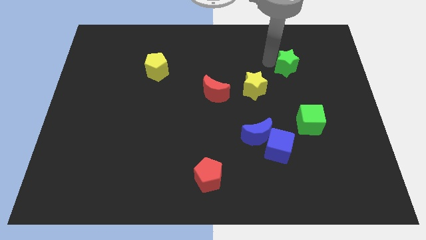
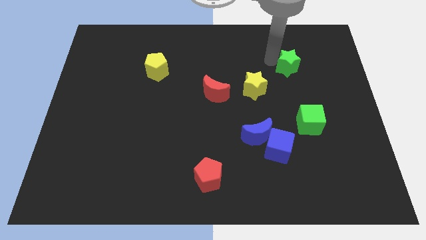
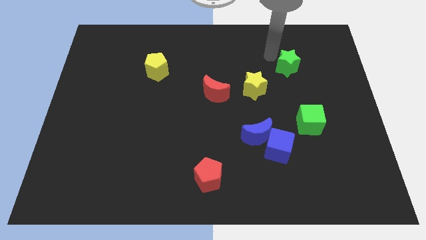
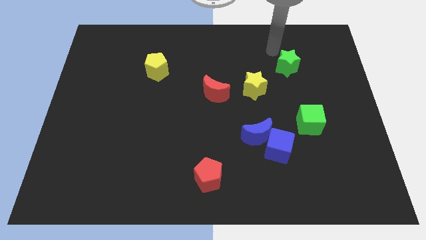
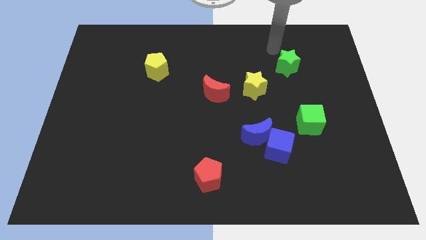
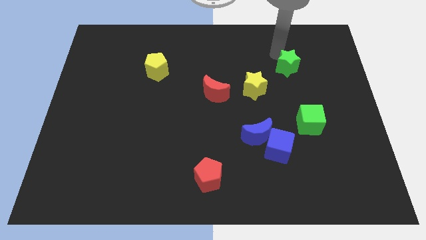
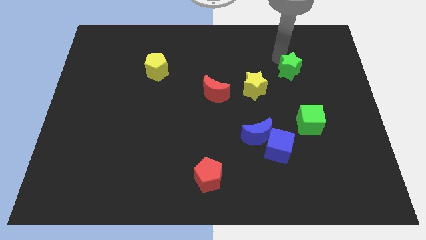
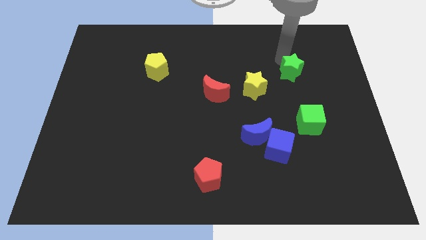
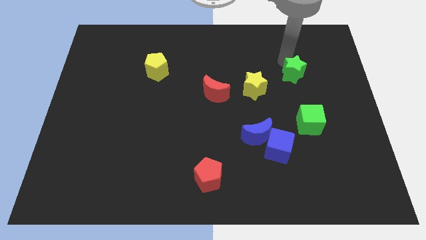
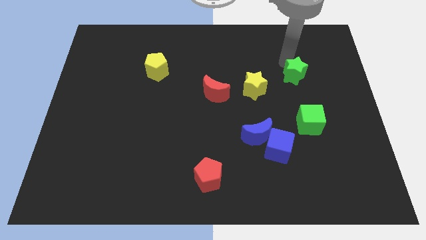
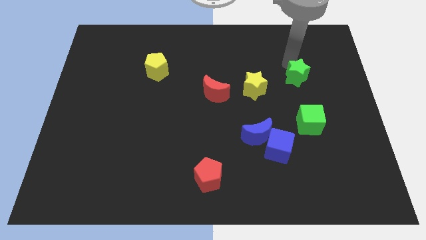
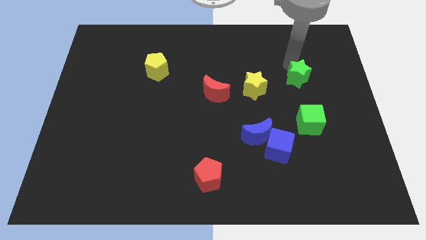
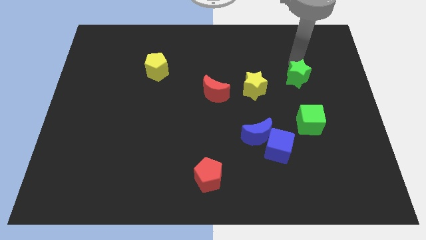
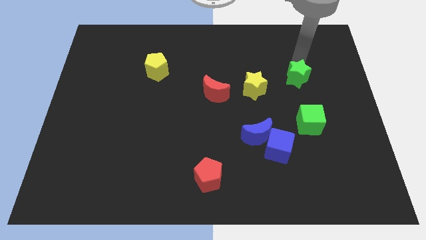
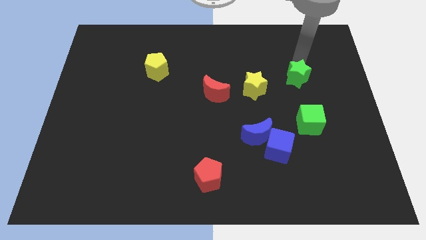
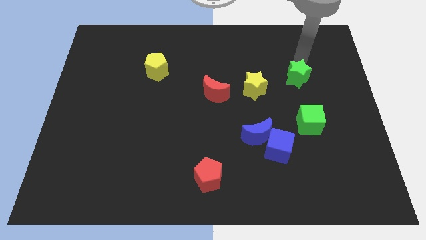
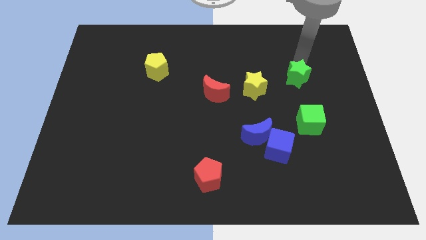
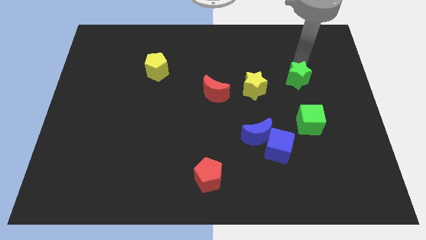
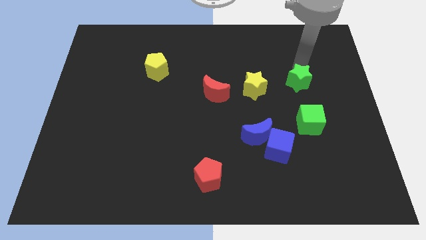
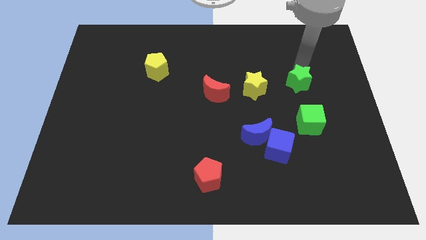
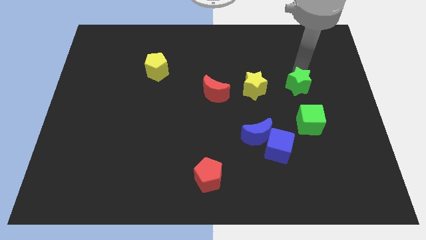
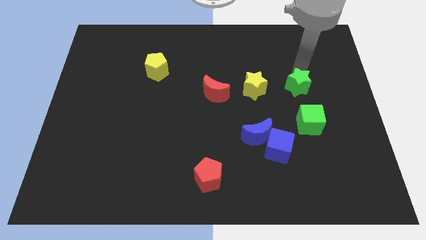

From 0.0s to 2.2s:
push green star downwards

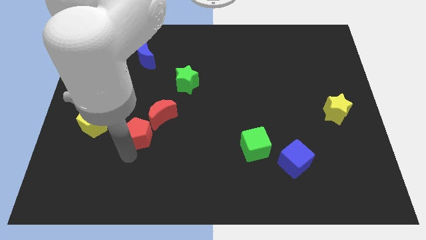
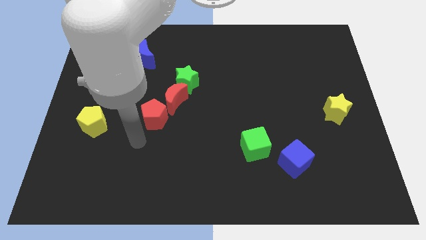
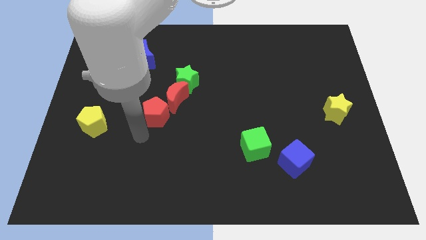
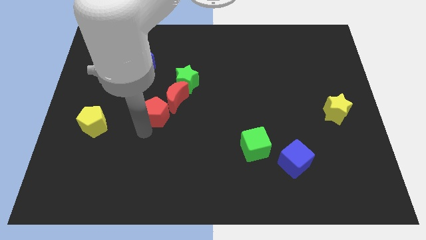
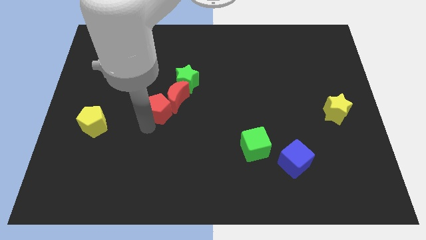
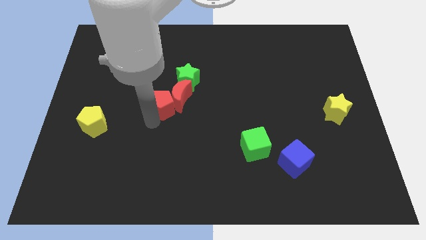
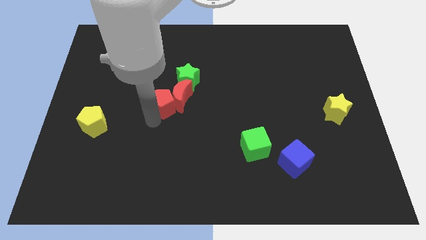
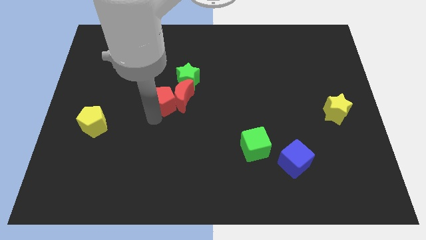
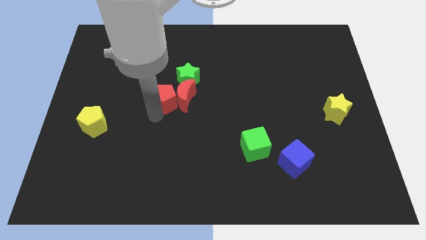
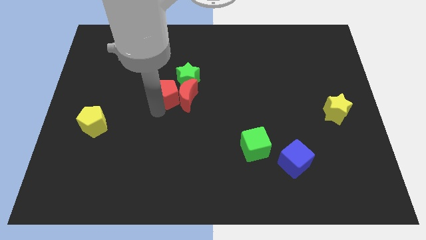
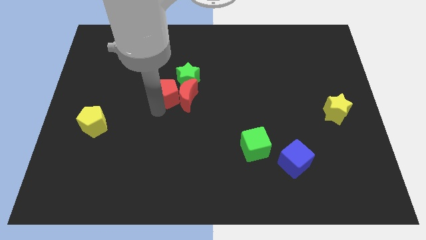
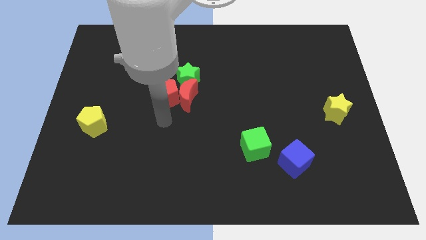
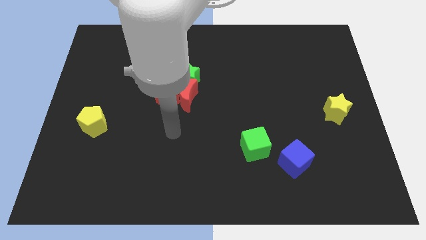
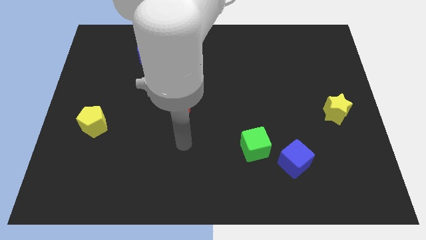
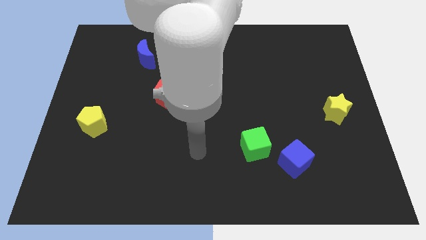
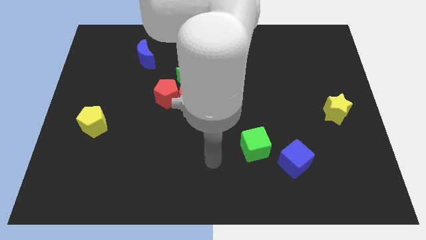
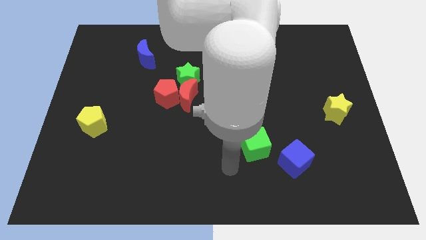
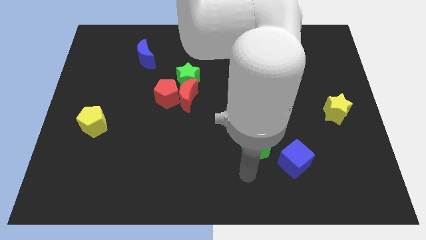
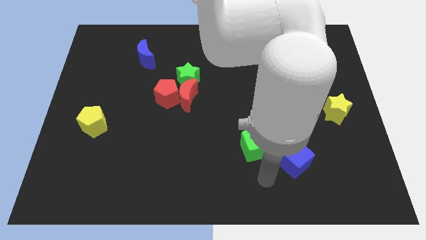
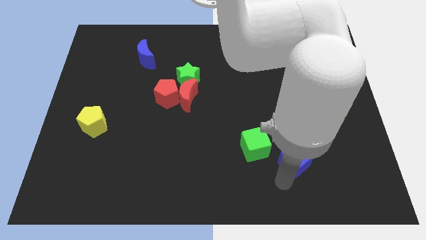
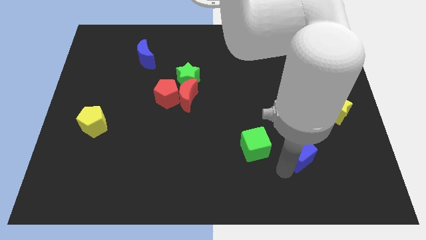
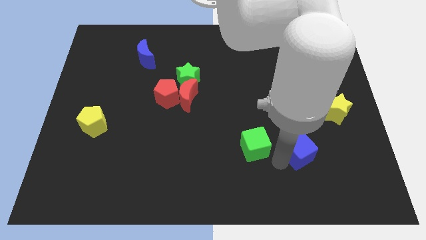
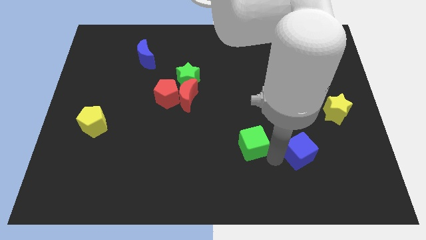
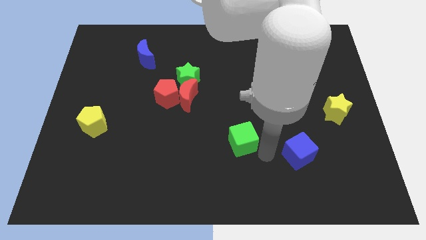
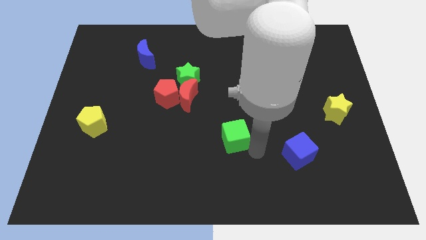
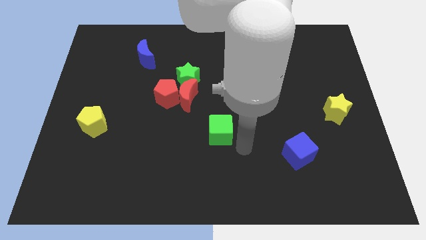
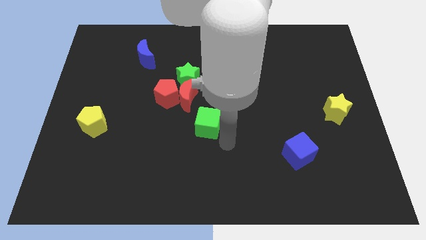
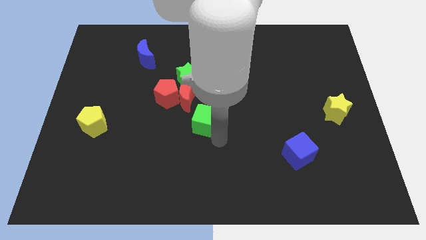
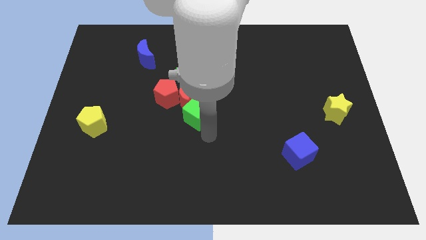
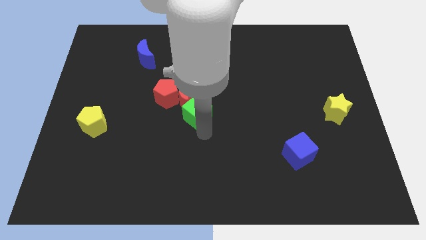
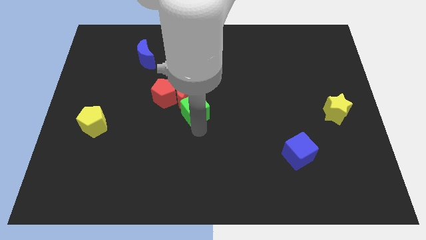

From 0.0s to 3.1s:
push red blocks and green cube in to green star

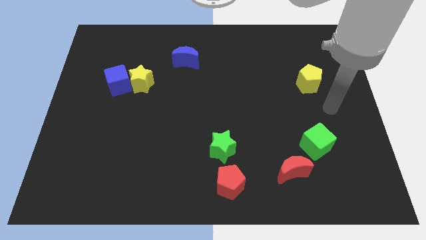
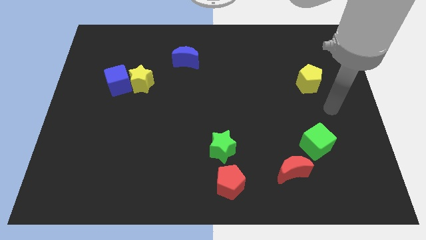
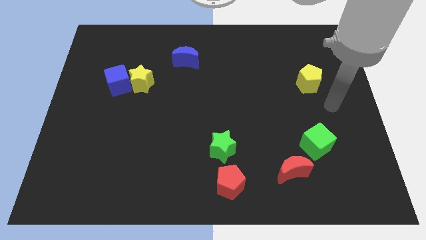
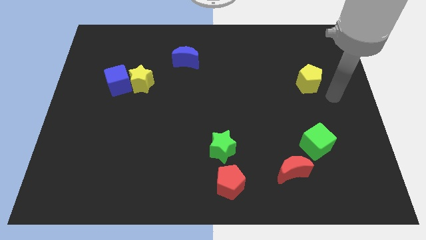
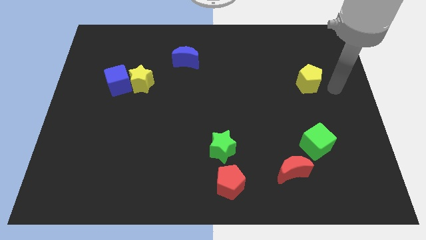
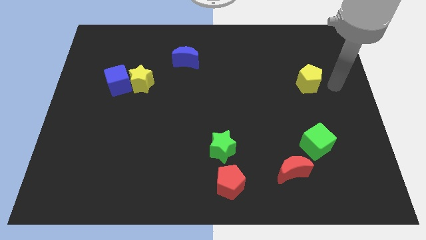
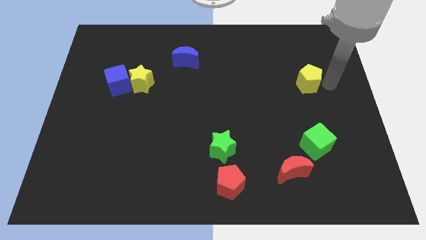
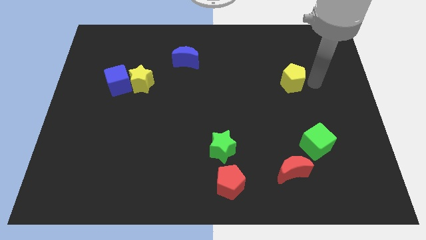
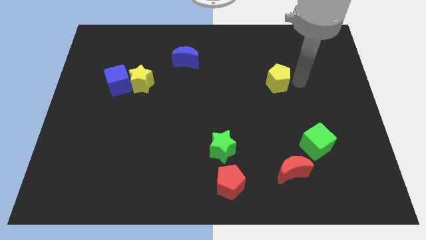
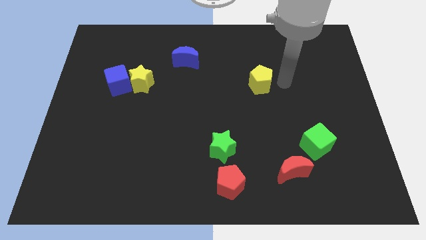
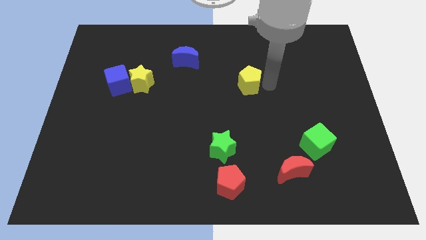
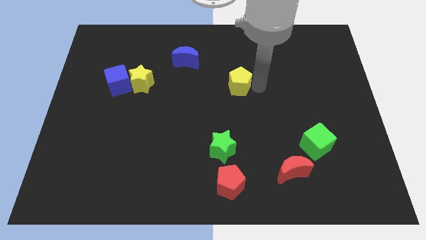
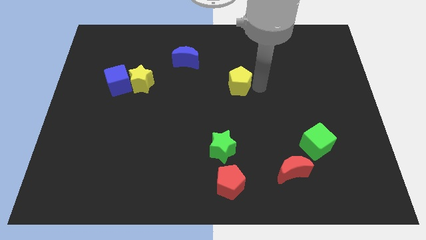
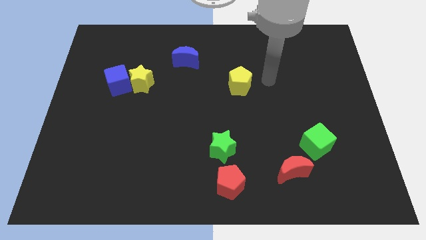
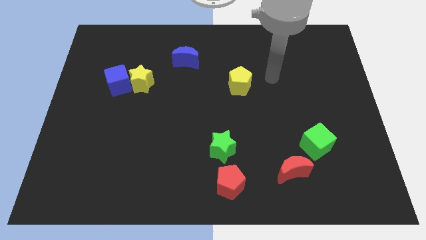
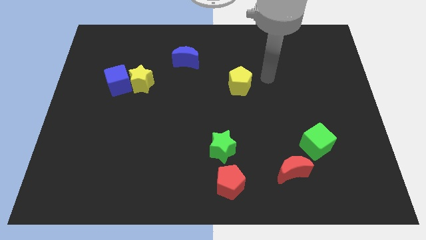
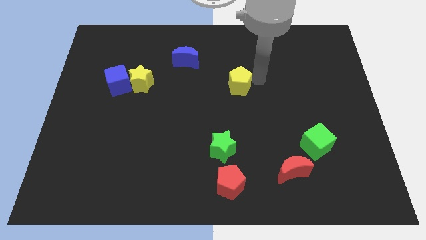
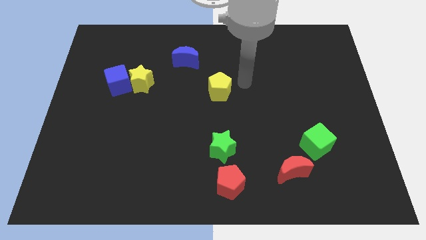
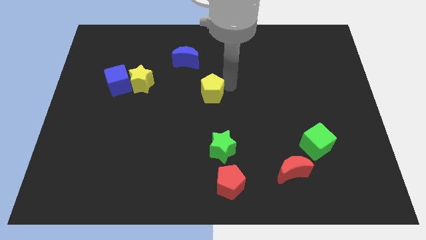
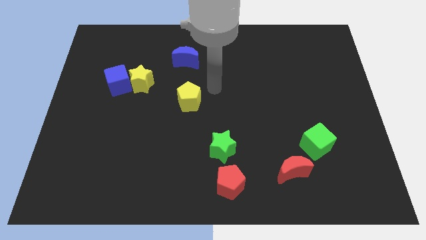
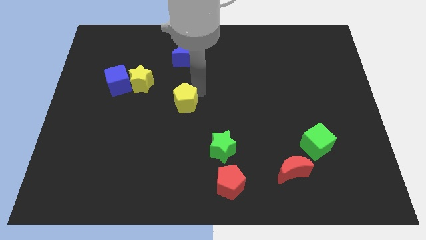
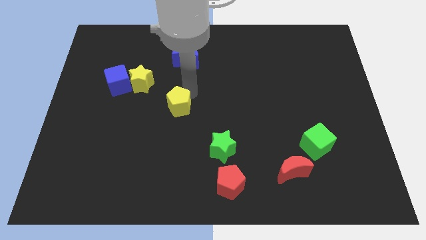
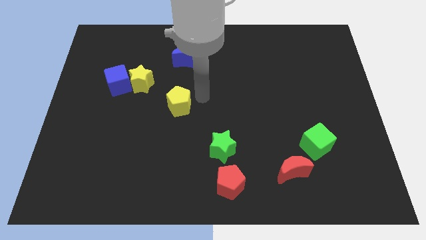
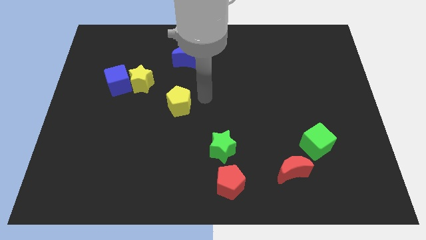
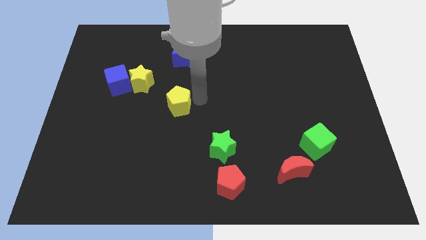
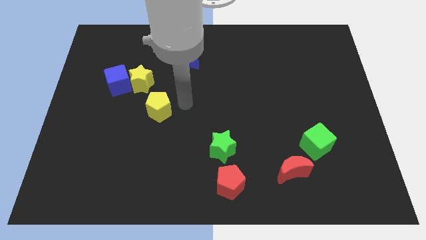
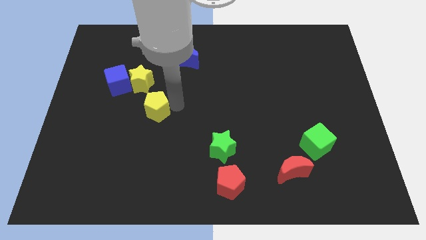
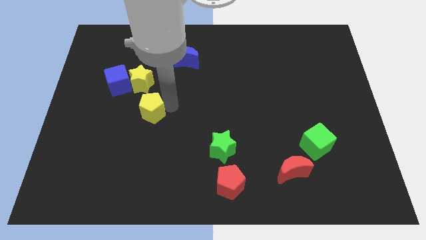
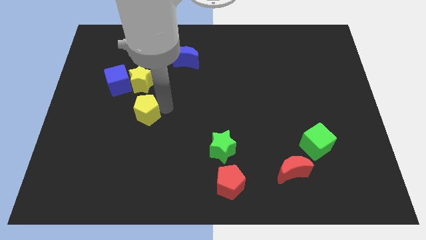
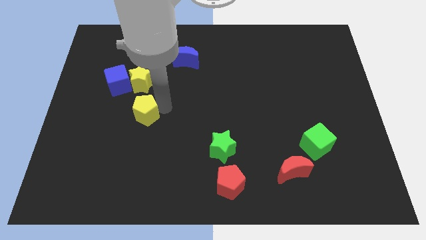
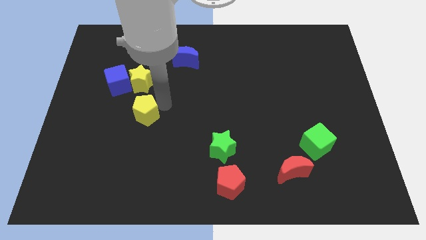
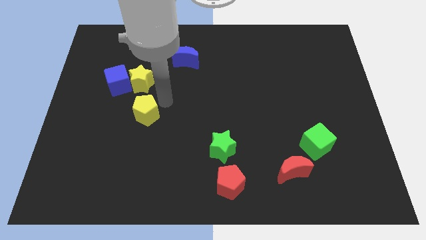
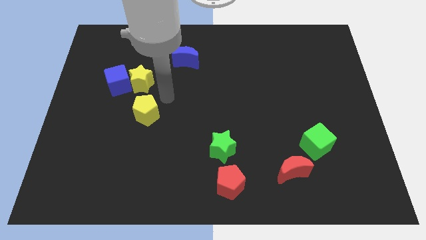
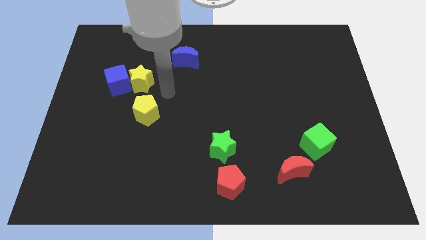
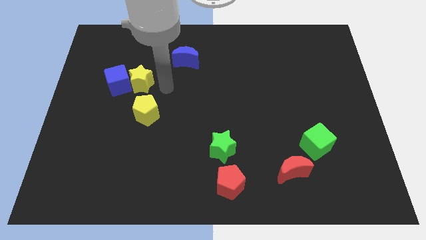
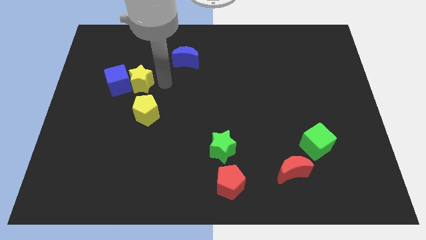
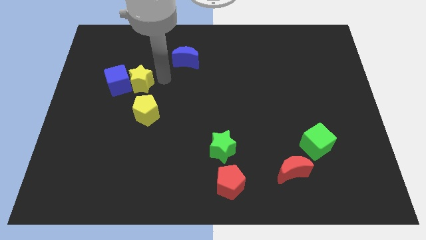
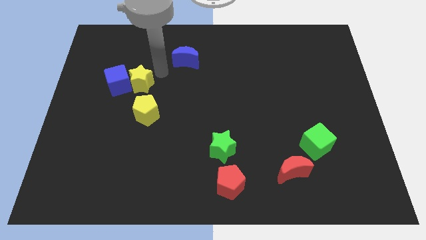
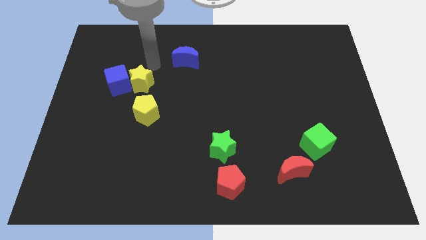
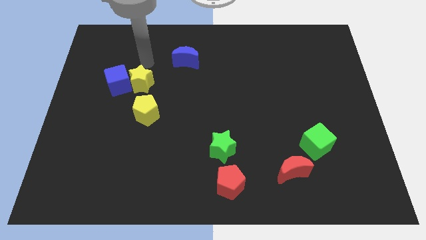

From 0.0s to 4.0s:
push the yellow pentagon towards the down side of the yellow star
